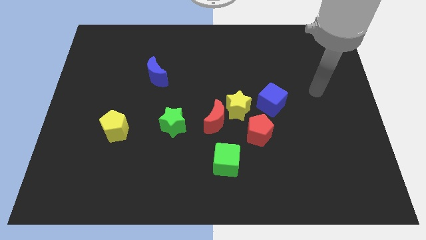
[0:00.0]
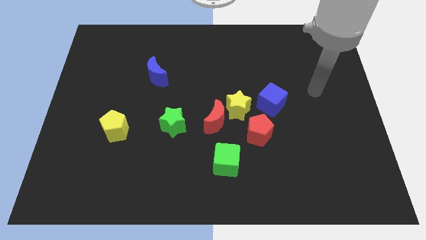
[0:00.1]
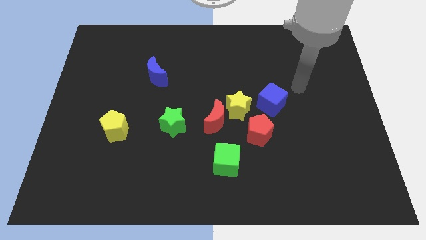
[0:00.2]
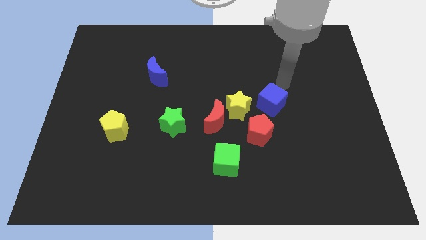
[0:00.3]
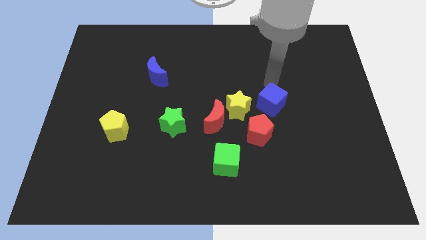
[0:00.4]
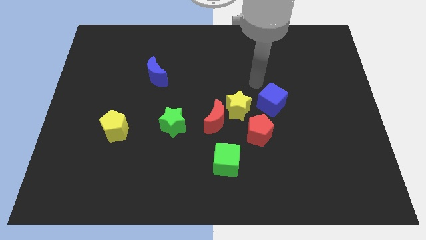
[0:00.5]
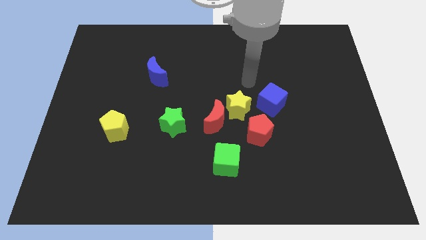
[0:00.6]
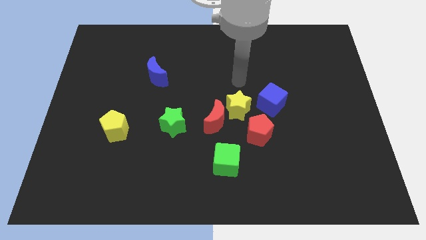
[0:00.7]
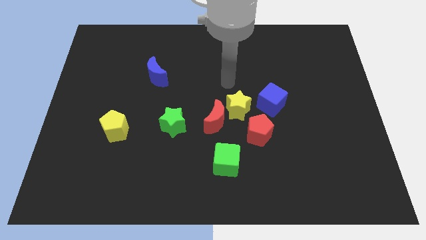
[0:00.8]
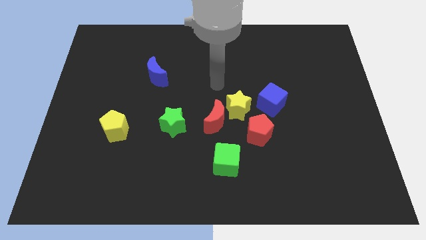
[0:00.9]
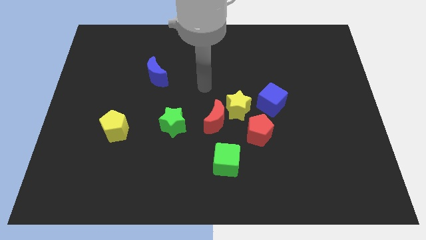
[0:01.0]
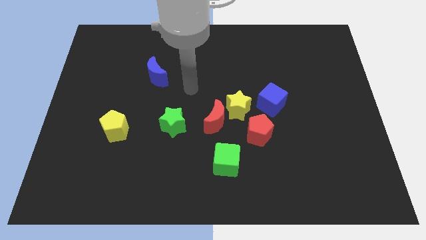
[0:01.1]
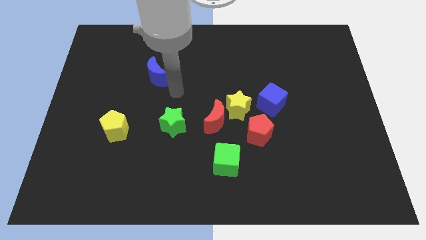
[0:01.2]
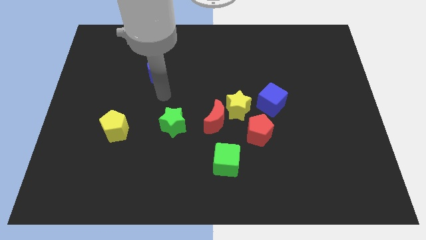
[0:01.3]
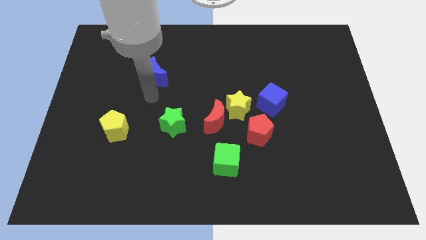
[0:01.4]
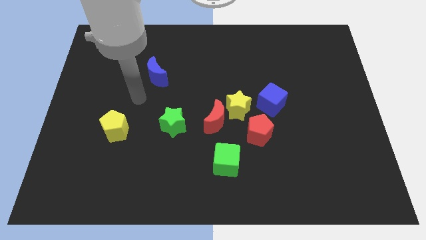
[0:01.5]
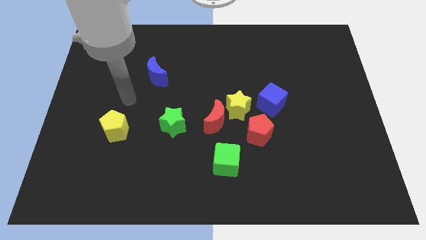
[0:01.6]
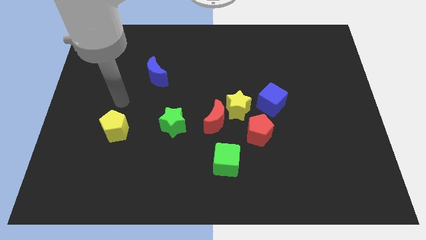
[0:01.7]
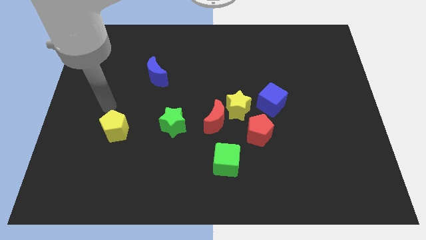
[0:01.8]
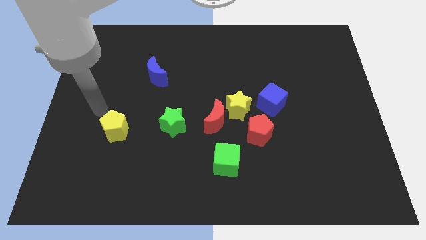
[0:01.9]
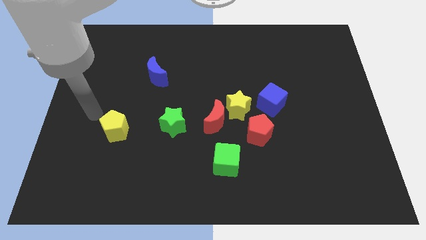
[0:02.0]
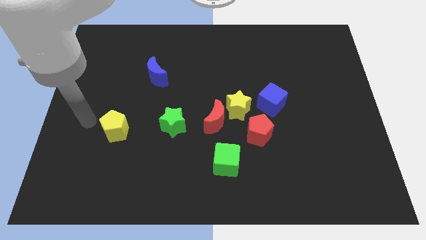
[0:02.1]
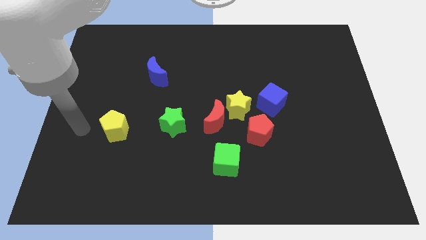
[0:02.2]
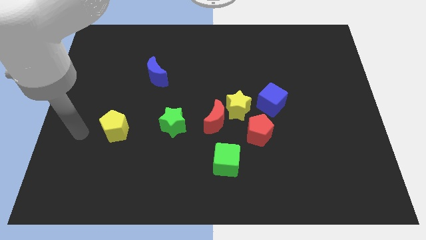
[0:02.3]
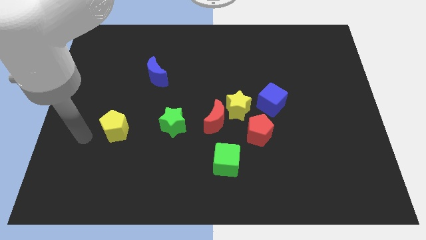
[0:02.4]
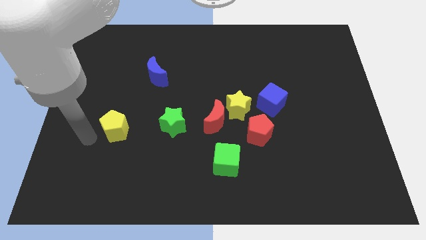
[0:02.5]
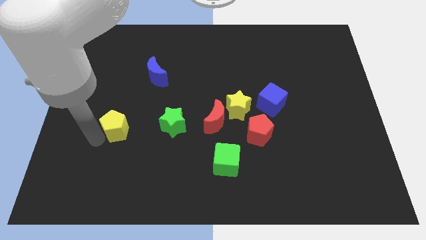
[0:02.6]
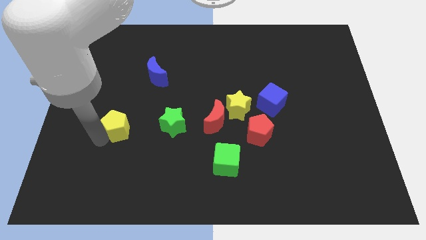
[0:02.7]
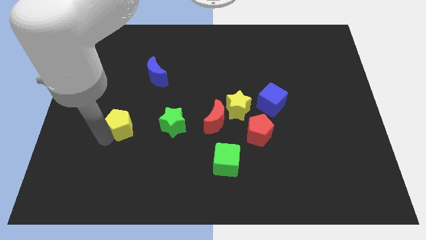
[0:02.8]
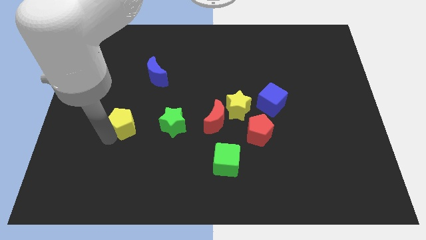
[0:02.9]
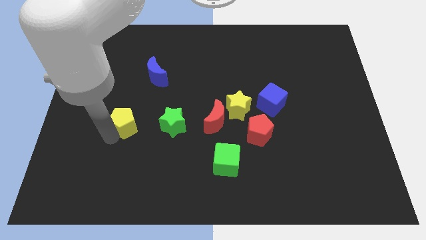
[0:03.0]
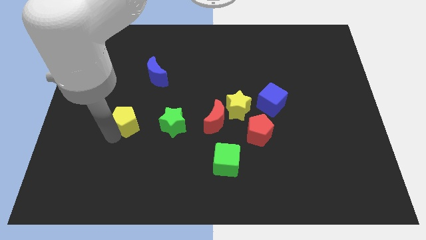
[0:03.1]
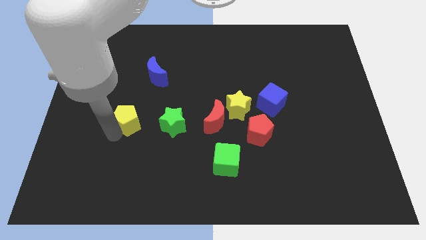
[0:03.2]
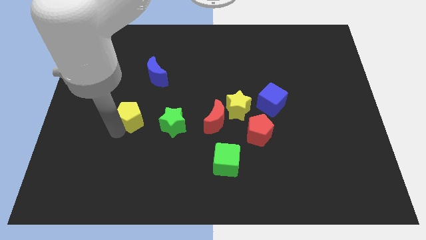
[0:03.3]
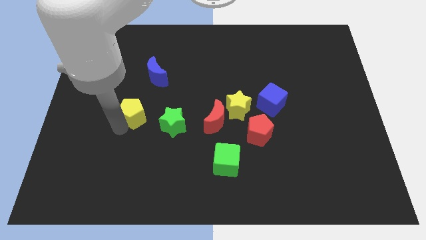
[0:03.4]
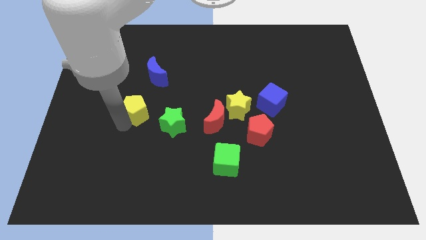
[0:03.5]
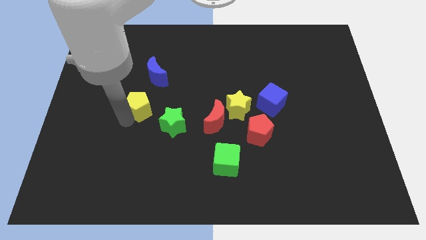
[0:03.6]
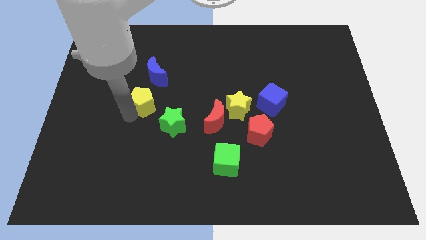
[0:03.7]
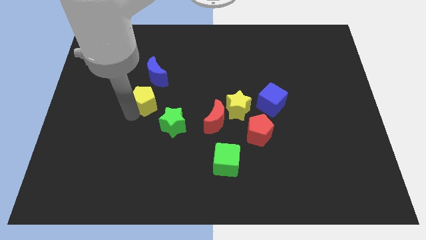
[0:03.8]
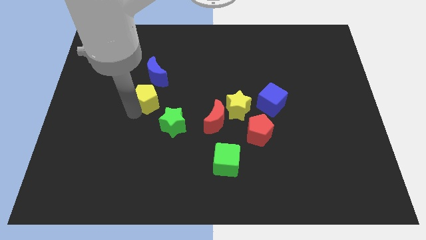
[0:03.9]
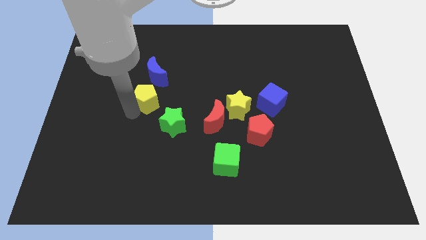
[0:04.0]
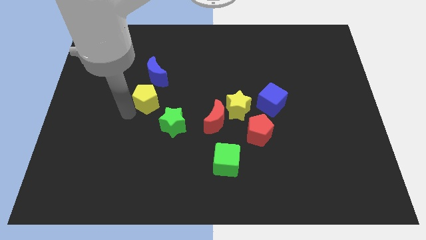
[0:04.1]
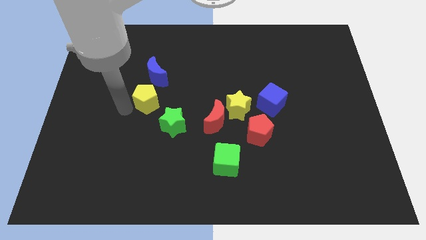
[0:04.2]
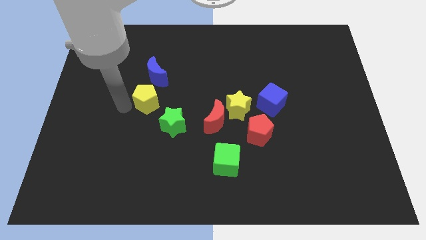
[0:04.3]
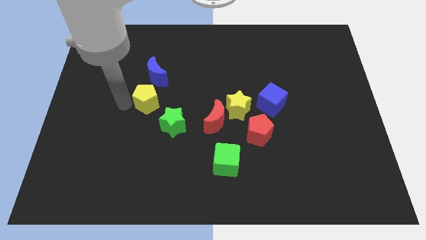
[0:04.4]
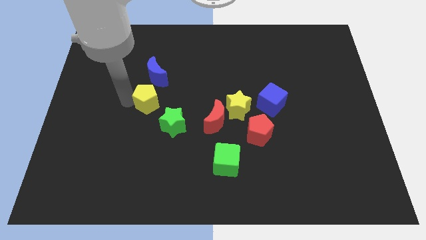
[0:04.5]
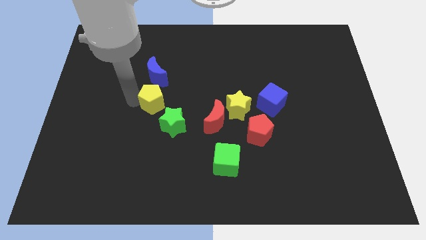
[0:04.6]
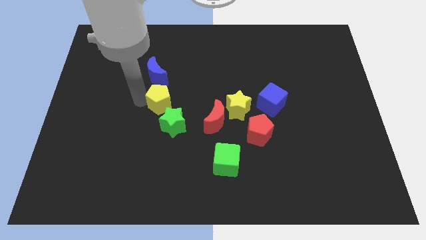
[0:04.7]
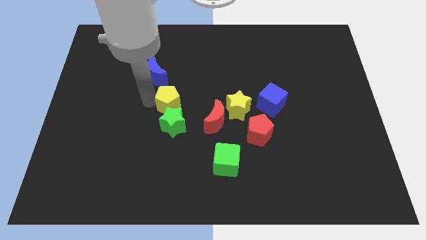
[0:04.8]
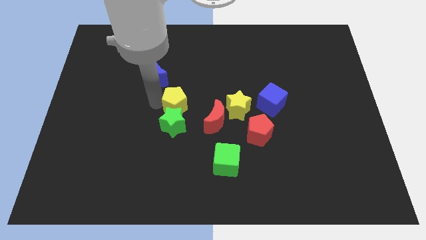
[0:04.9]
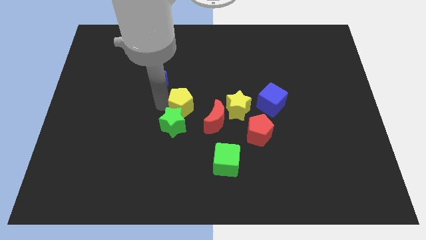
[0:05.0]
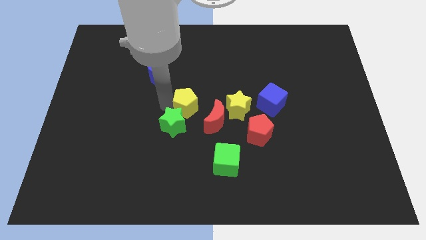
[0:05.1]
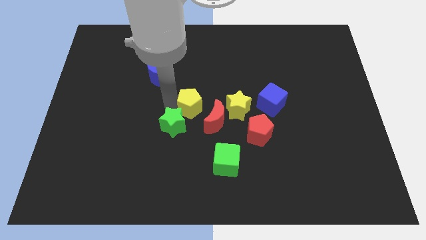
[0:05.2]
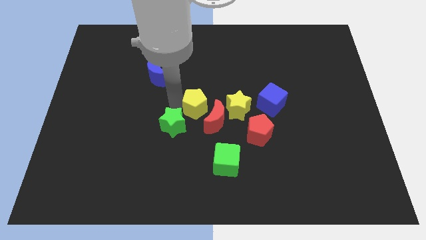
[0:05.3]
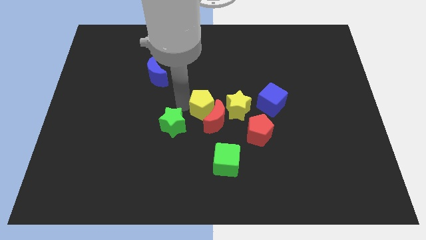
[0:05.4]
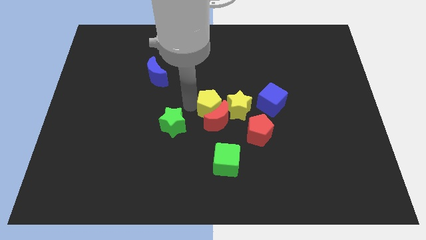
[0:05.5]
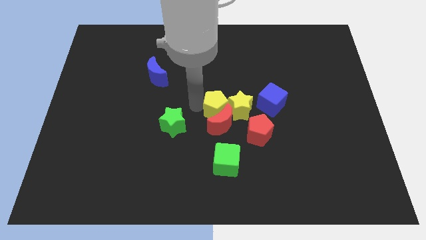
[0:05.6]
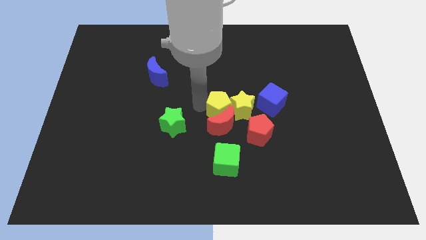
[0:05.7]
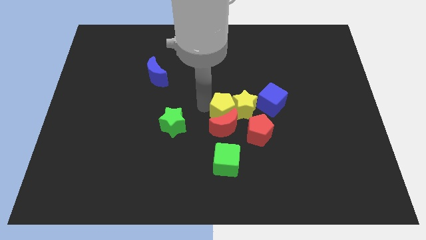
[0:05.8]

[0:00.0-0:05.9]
move the yellow pentagon next to the yellow star

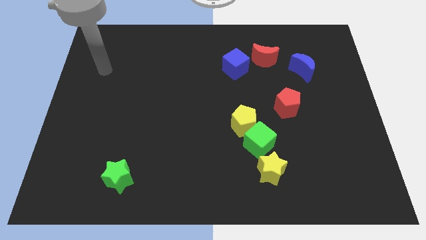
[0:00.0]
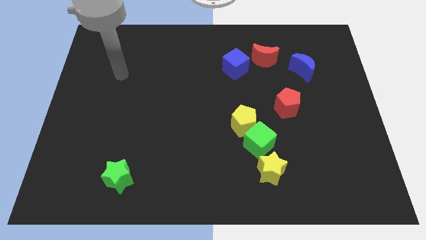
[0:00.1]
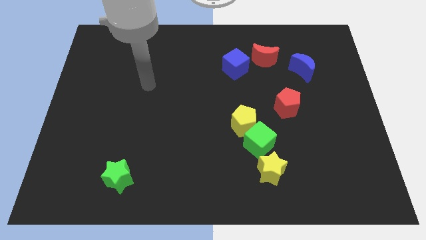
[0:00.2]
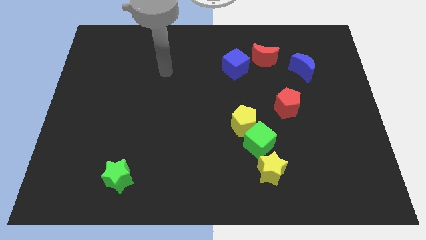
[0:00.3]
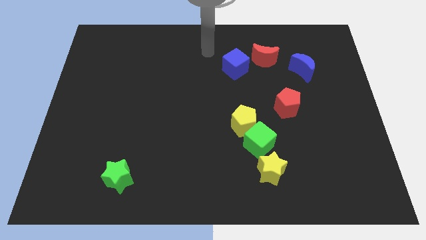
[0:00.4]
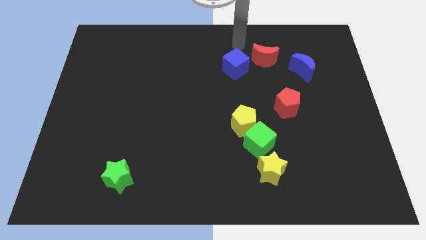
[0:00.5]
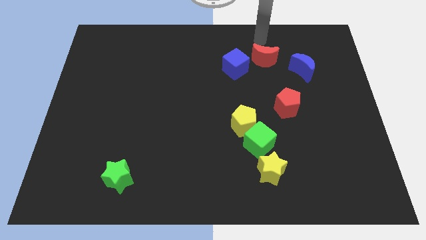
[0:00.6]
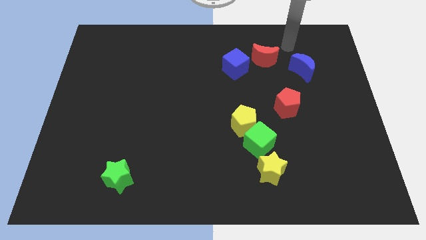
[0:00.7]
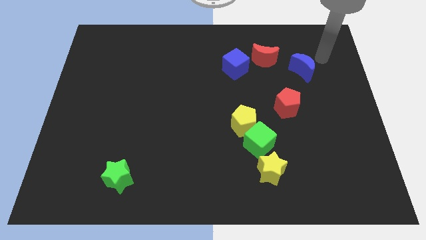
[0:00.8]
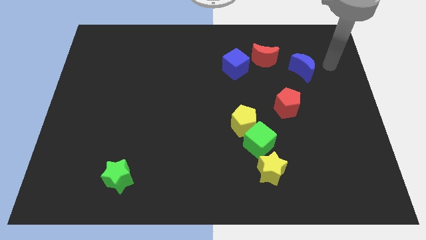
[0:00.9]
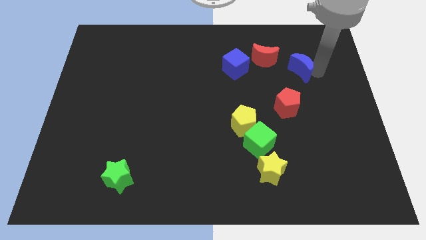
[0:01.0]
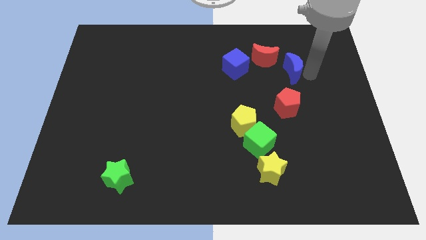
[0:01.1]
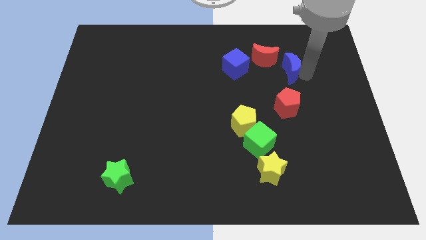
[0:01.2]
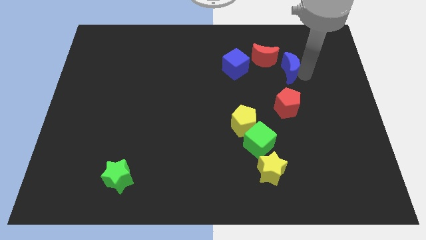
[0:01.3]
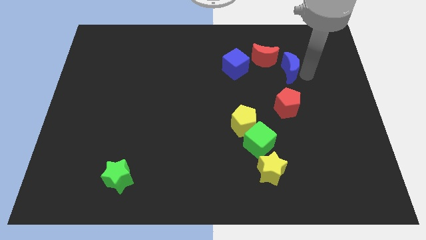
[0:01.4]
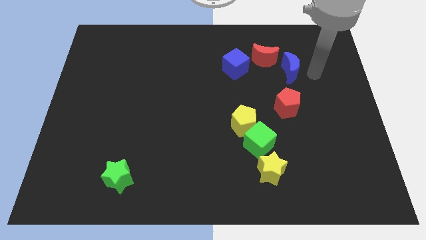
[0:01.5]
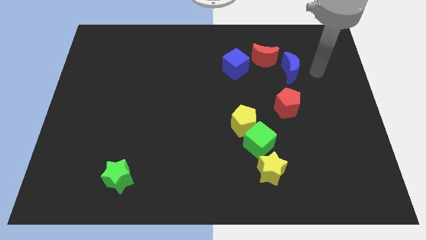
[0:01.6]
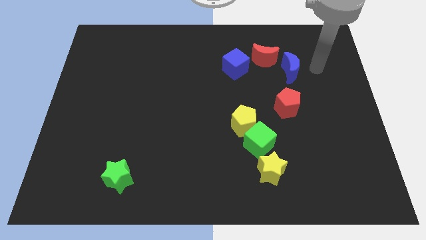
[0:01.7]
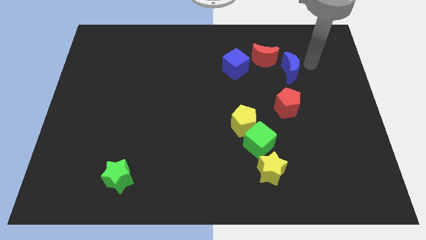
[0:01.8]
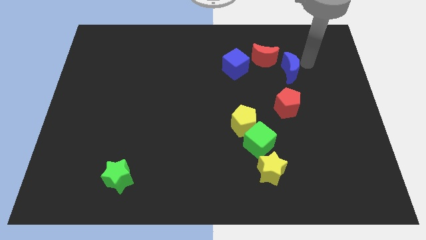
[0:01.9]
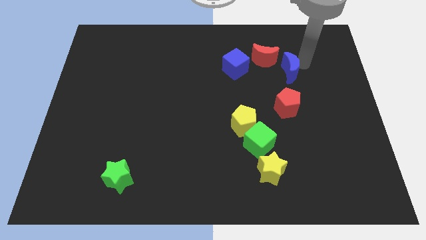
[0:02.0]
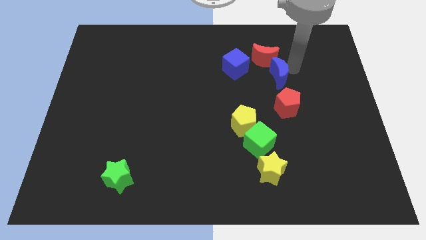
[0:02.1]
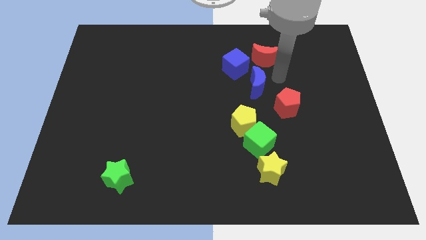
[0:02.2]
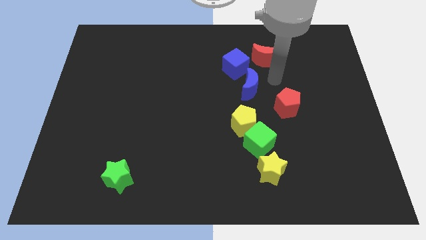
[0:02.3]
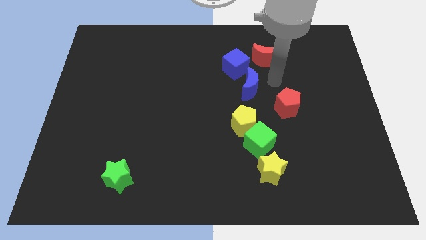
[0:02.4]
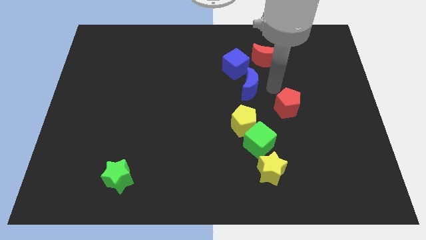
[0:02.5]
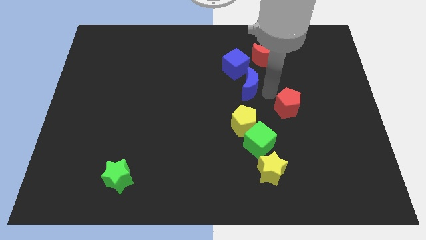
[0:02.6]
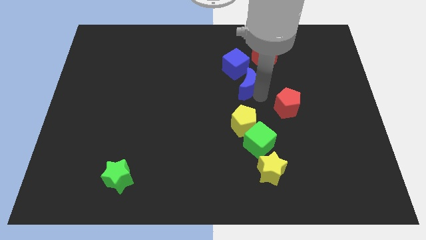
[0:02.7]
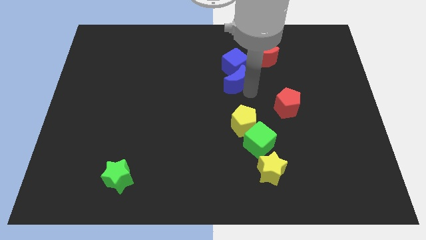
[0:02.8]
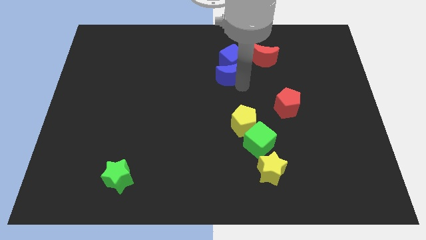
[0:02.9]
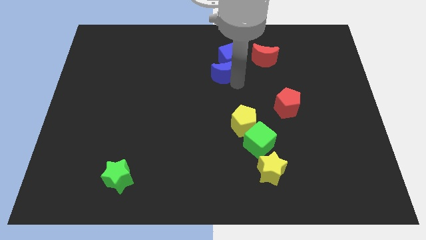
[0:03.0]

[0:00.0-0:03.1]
put the blue moon to the blue cube
